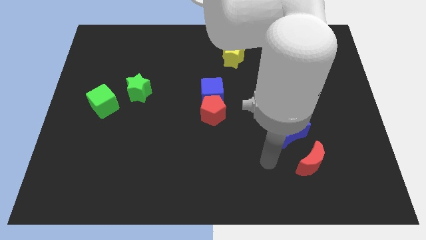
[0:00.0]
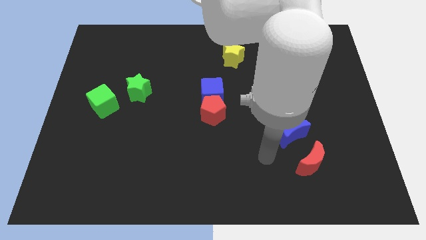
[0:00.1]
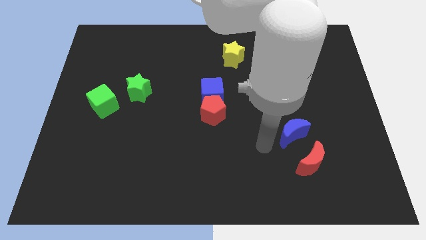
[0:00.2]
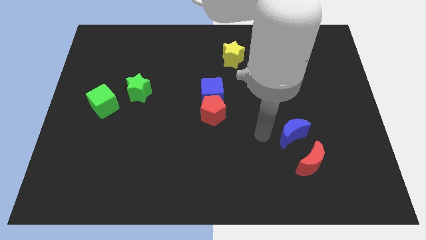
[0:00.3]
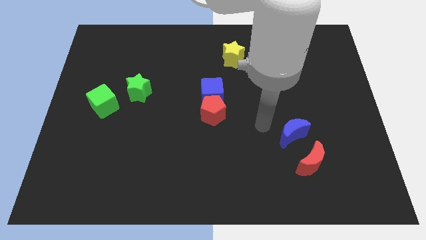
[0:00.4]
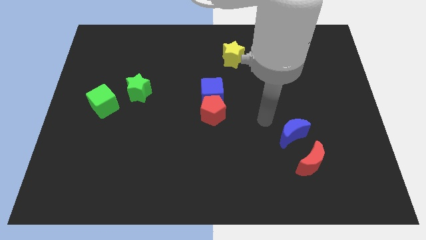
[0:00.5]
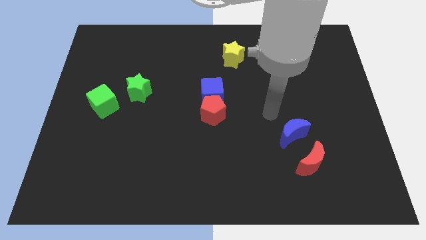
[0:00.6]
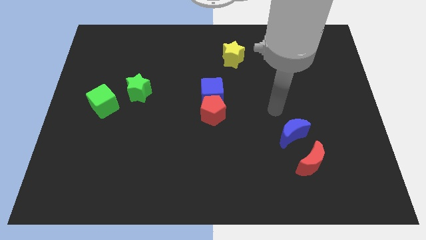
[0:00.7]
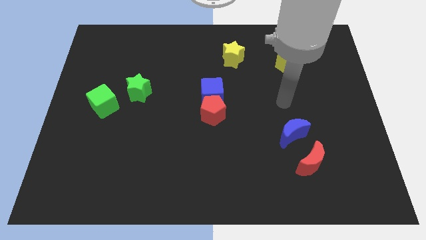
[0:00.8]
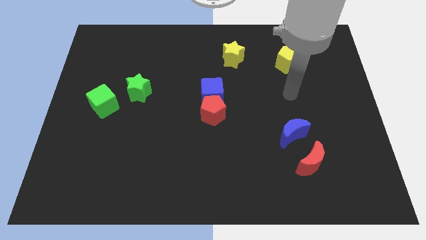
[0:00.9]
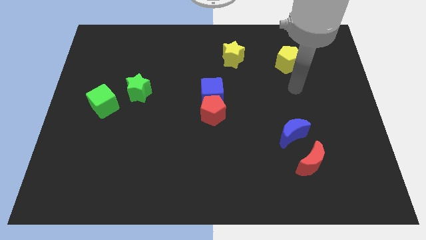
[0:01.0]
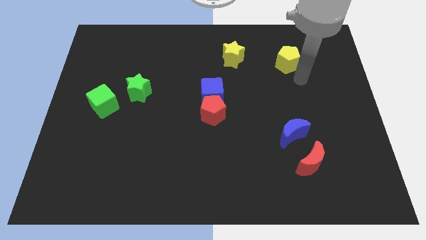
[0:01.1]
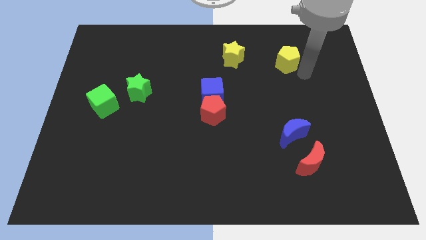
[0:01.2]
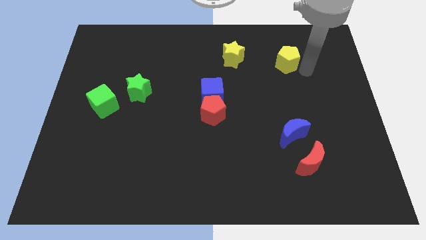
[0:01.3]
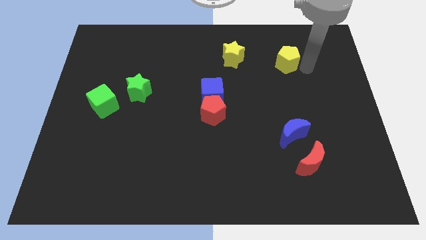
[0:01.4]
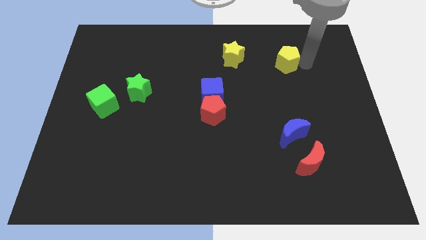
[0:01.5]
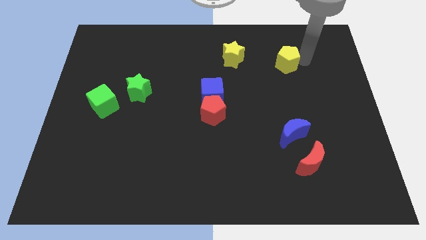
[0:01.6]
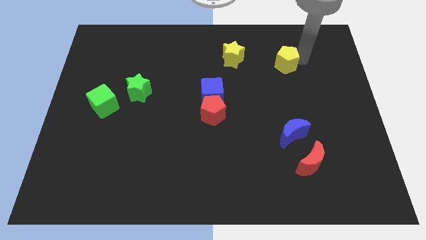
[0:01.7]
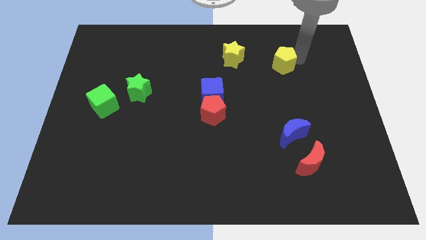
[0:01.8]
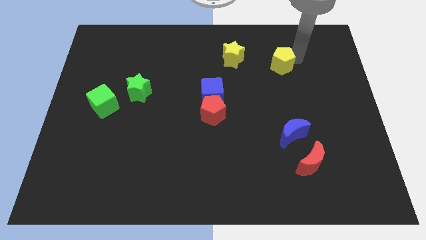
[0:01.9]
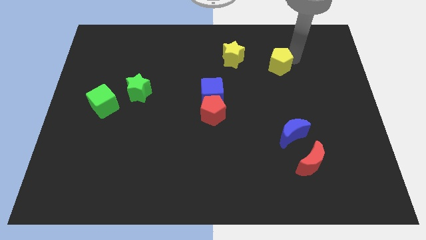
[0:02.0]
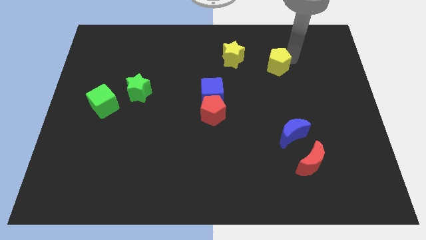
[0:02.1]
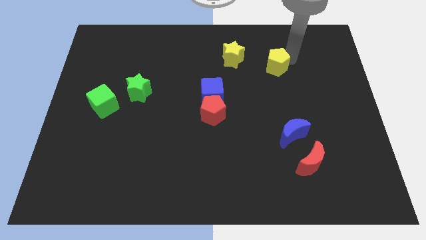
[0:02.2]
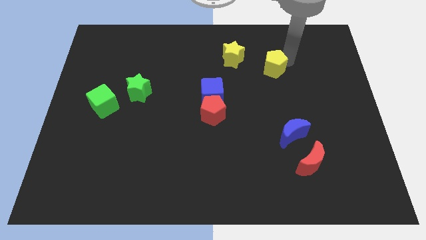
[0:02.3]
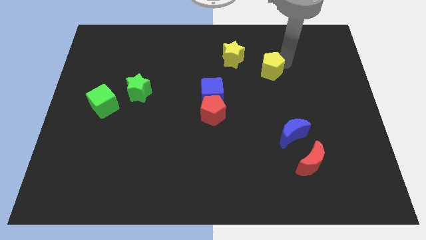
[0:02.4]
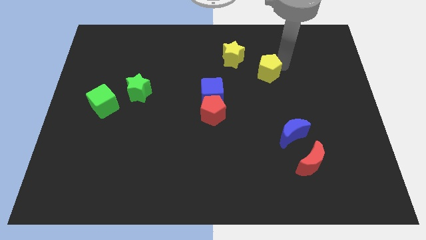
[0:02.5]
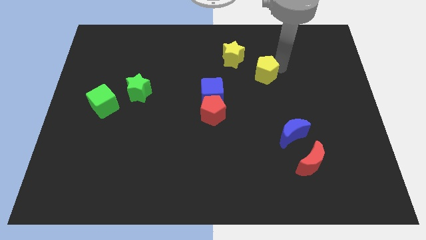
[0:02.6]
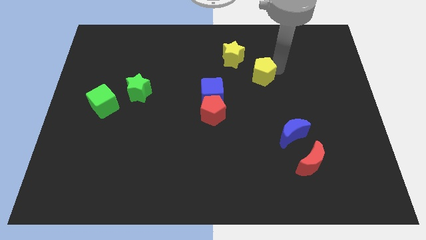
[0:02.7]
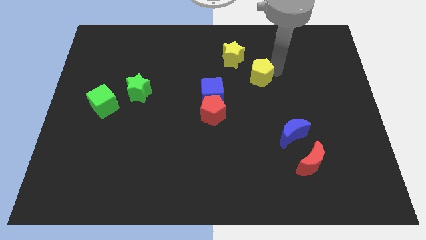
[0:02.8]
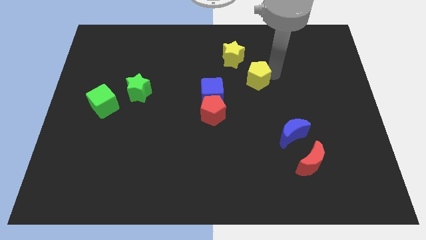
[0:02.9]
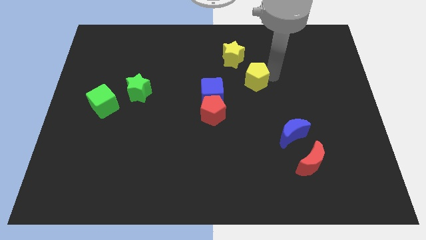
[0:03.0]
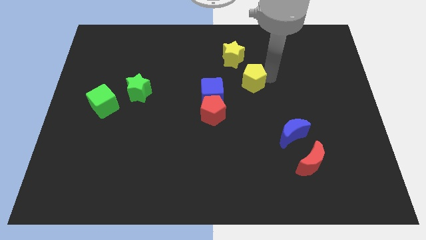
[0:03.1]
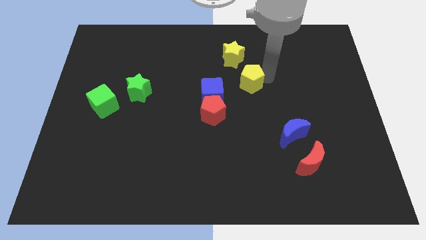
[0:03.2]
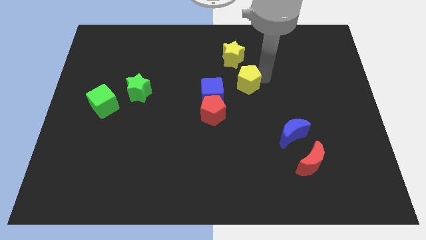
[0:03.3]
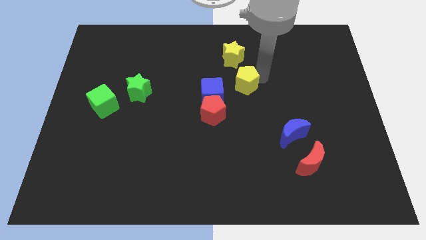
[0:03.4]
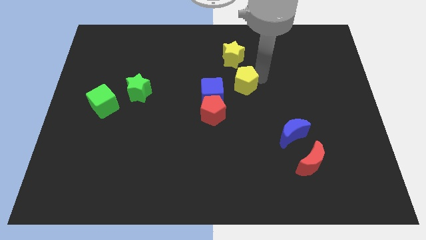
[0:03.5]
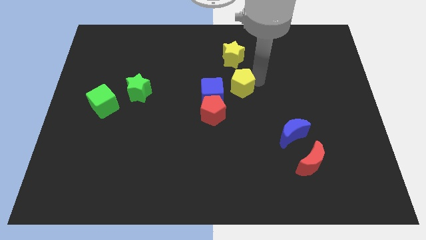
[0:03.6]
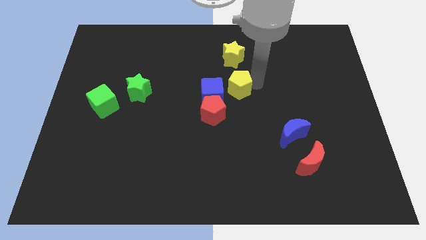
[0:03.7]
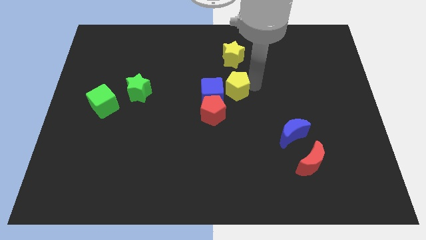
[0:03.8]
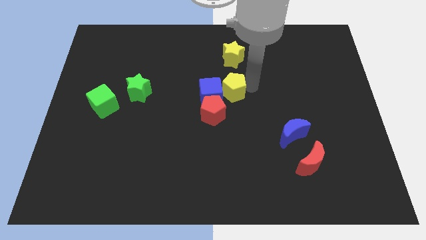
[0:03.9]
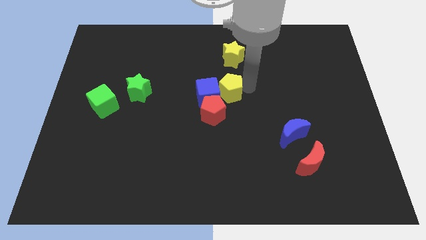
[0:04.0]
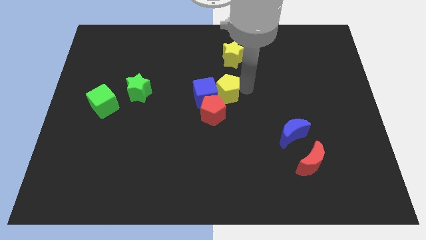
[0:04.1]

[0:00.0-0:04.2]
move the yellow pentagon to the blue cube

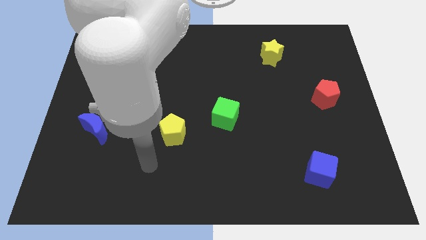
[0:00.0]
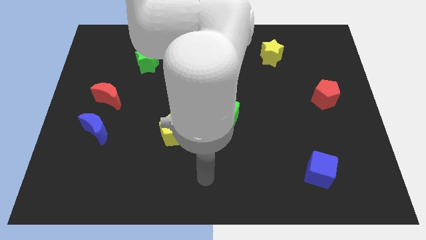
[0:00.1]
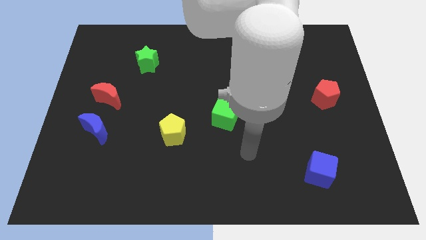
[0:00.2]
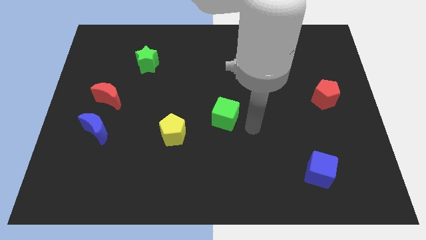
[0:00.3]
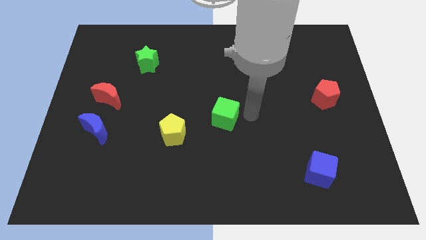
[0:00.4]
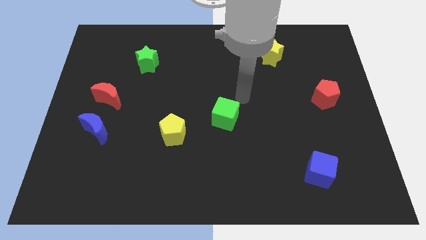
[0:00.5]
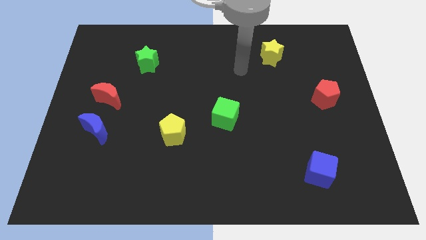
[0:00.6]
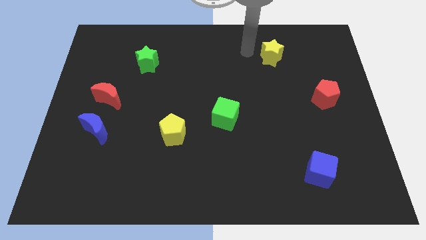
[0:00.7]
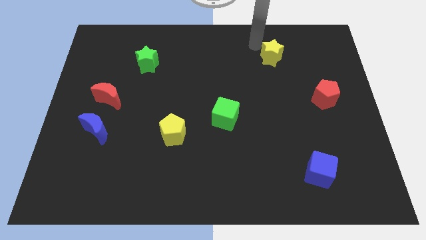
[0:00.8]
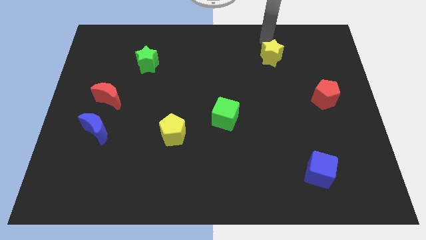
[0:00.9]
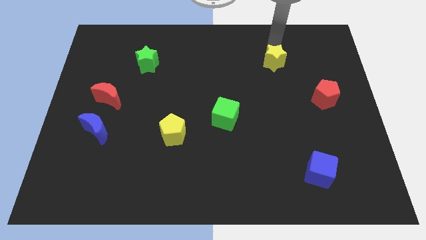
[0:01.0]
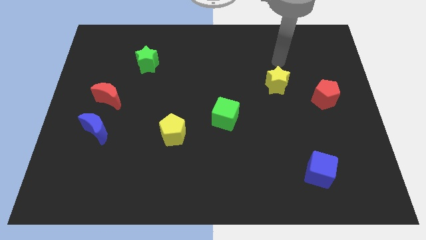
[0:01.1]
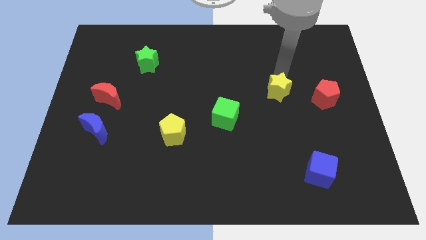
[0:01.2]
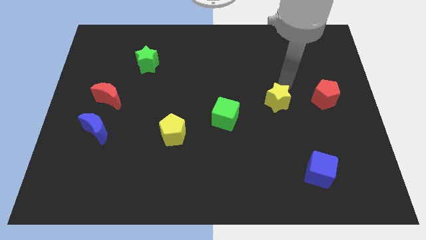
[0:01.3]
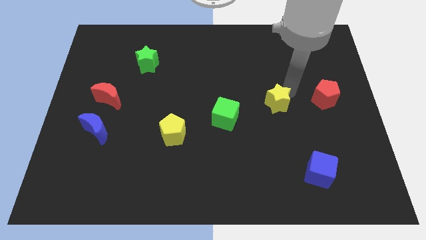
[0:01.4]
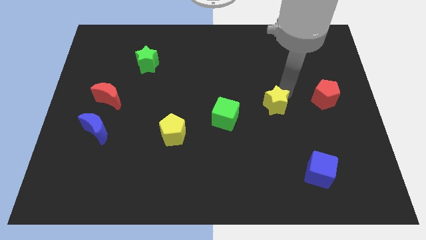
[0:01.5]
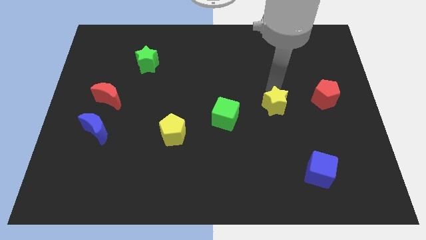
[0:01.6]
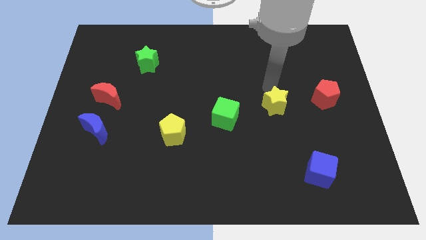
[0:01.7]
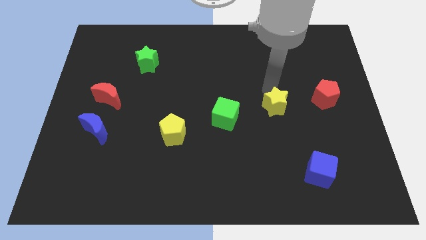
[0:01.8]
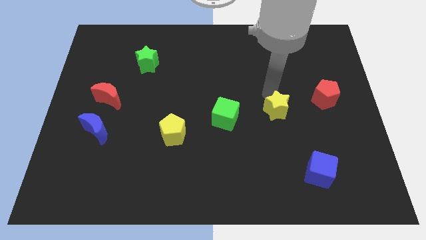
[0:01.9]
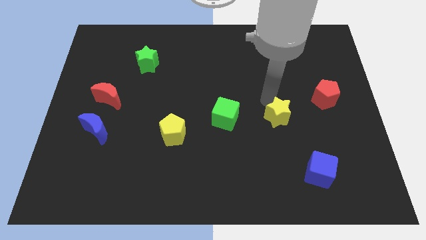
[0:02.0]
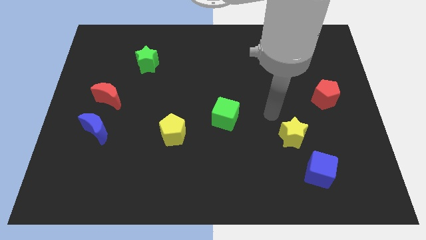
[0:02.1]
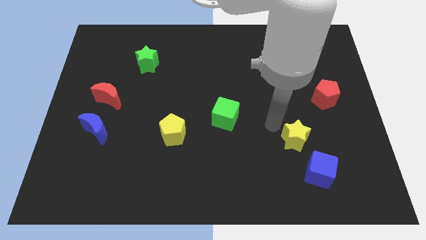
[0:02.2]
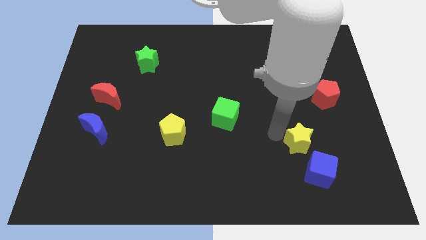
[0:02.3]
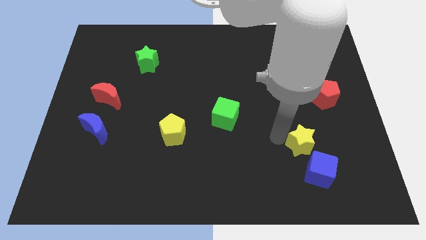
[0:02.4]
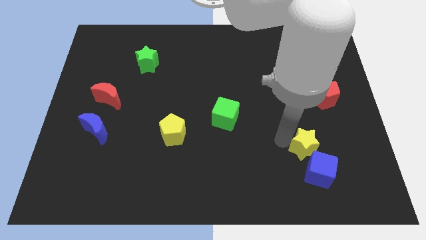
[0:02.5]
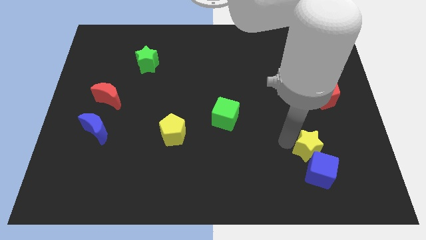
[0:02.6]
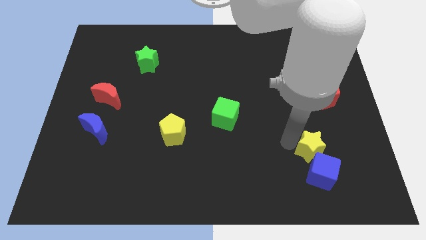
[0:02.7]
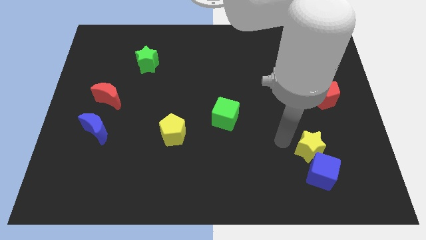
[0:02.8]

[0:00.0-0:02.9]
slide the yellow star towards the blue cube

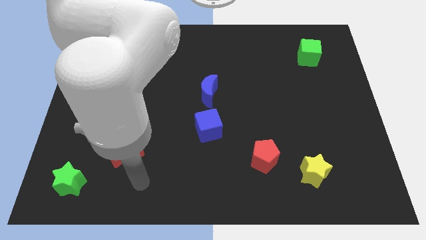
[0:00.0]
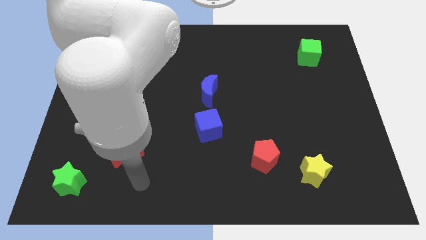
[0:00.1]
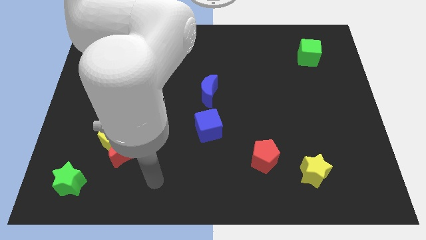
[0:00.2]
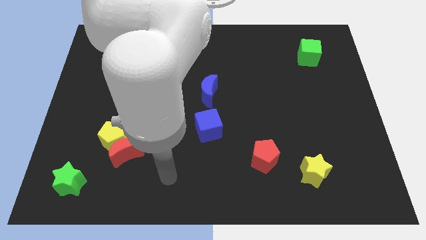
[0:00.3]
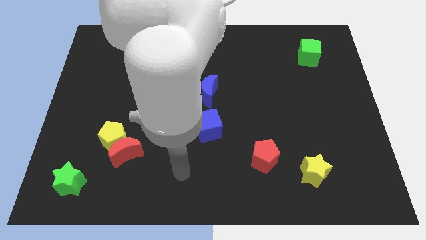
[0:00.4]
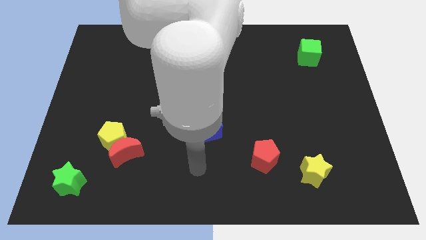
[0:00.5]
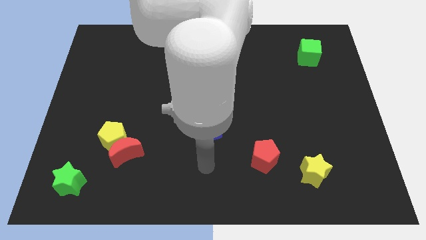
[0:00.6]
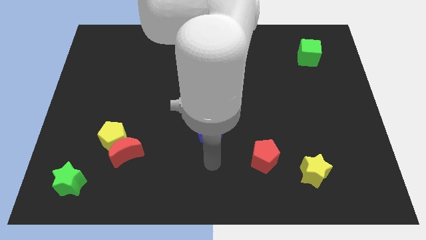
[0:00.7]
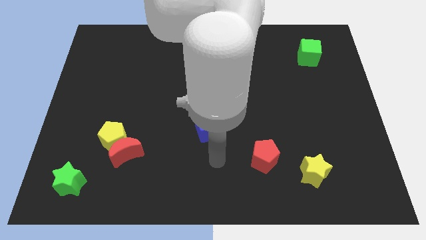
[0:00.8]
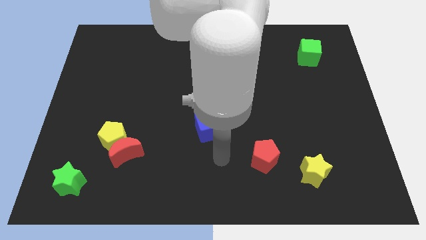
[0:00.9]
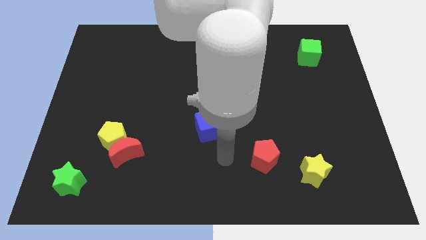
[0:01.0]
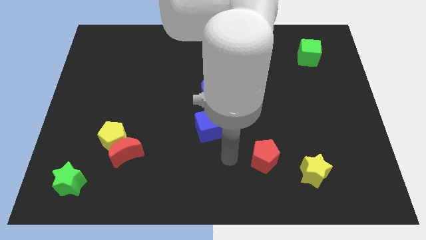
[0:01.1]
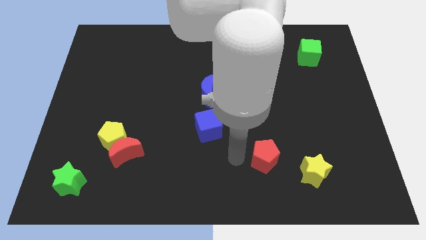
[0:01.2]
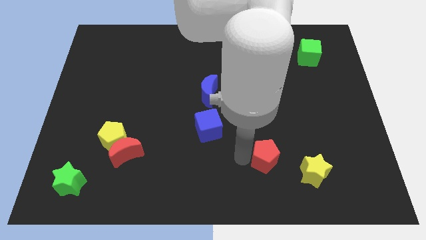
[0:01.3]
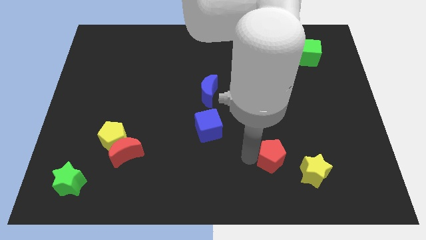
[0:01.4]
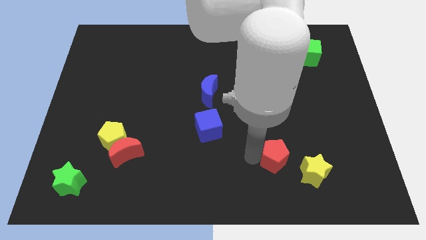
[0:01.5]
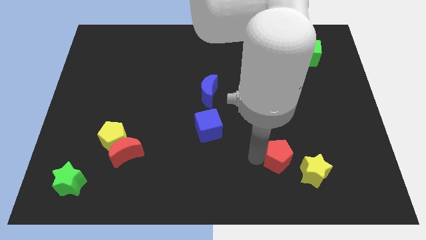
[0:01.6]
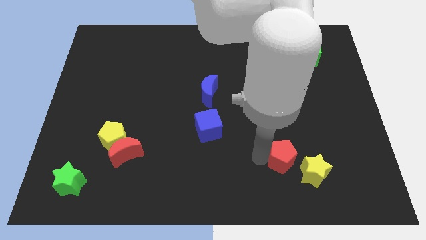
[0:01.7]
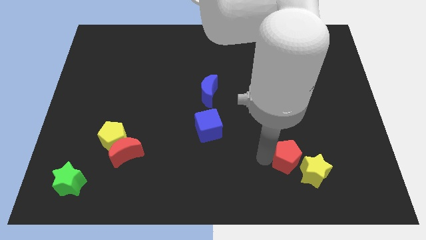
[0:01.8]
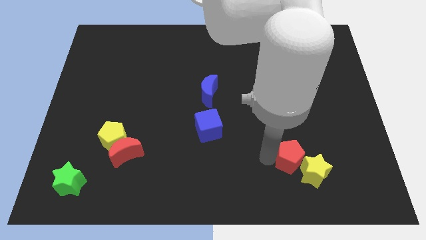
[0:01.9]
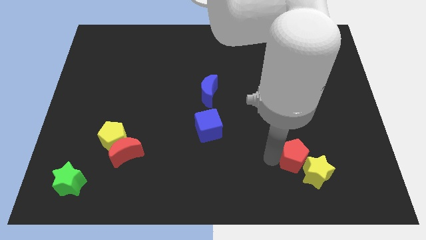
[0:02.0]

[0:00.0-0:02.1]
slide the red pentagon to the yellow star
